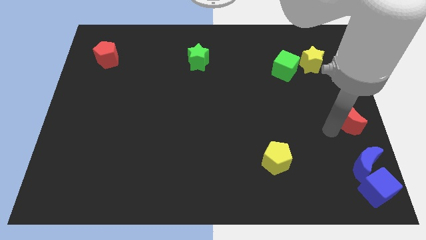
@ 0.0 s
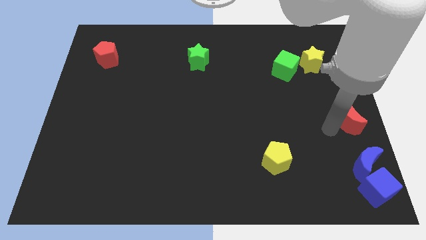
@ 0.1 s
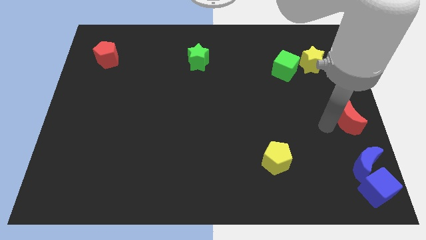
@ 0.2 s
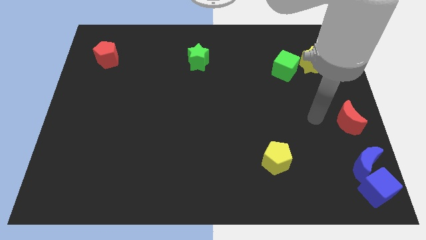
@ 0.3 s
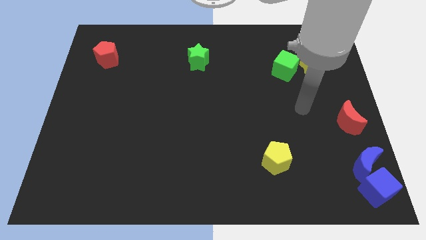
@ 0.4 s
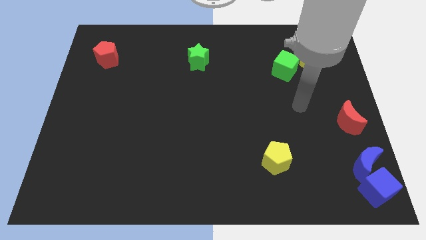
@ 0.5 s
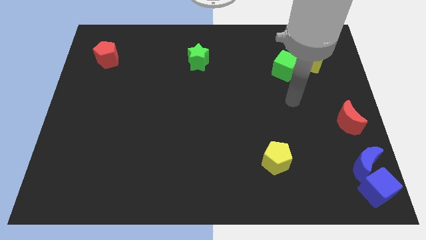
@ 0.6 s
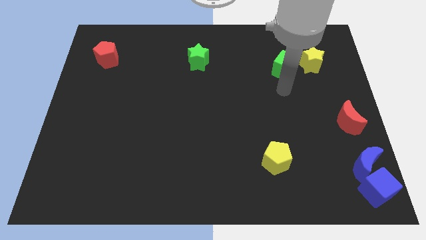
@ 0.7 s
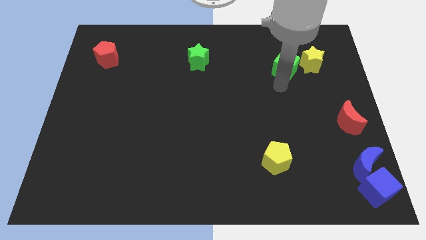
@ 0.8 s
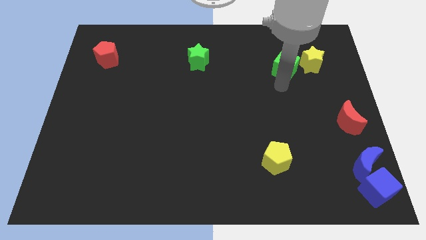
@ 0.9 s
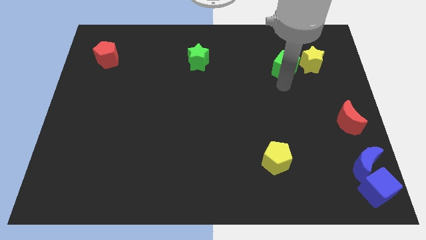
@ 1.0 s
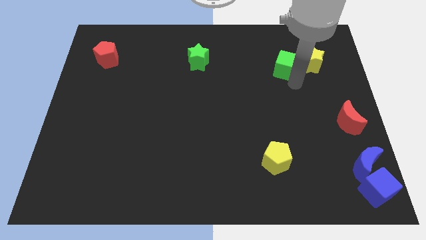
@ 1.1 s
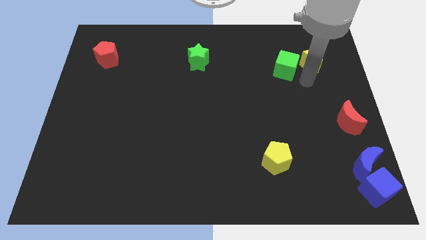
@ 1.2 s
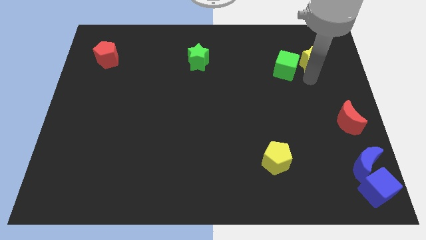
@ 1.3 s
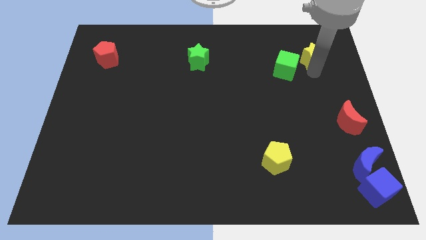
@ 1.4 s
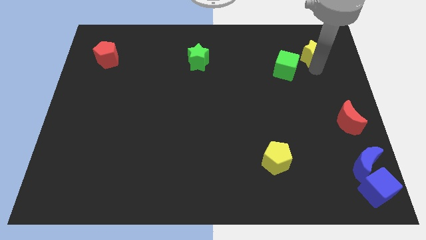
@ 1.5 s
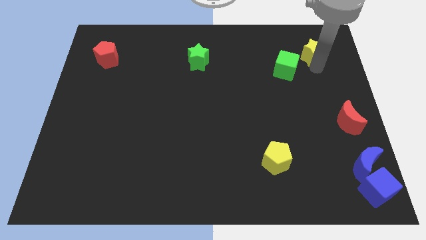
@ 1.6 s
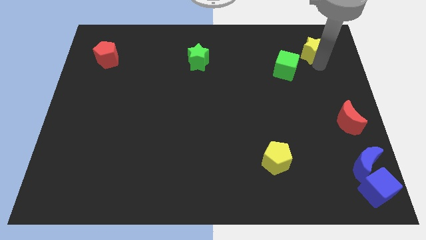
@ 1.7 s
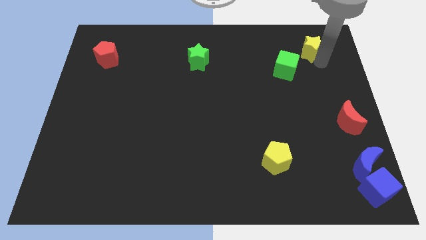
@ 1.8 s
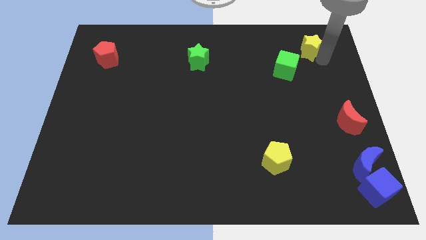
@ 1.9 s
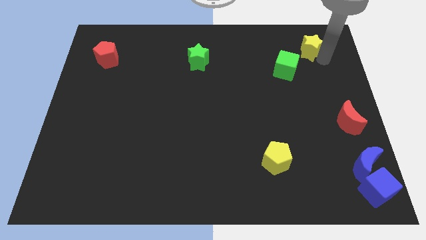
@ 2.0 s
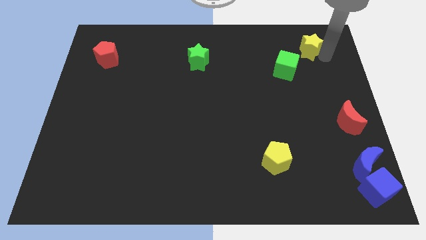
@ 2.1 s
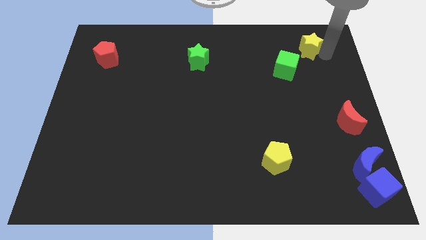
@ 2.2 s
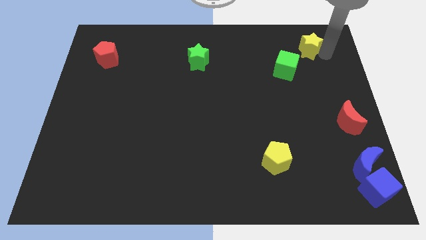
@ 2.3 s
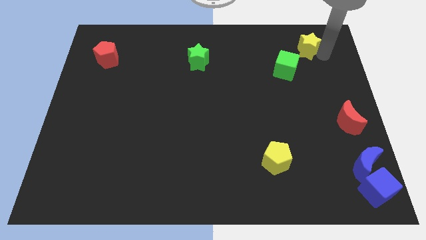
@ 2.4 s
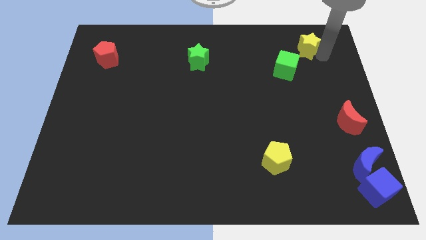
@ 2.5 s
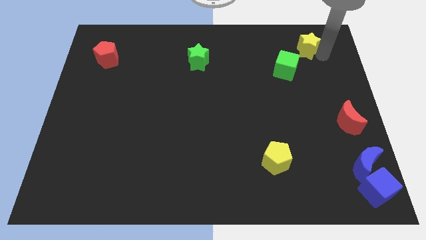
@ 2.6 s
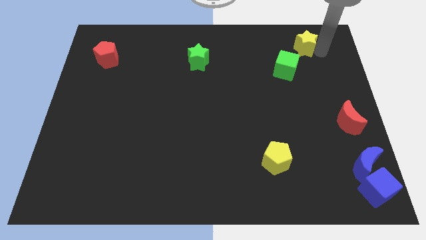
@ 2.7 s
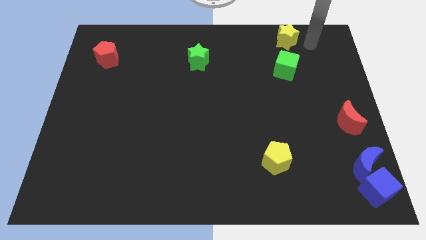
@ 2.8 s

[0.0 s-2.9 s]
push yellow star above green cube

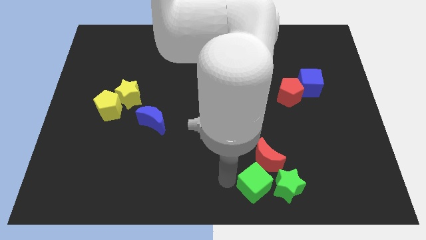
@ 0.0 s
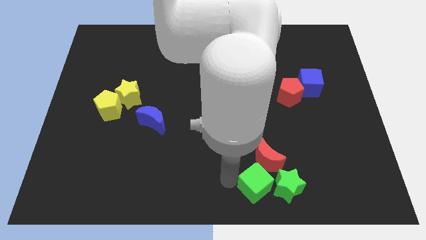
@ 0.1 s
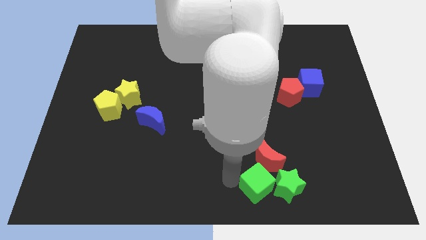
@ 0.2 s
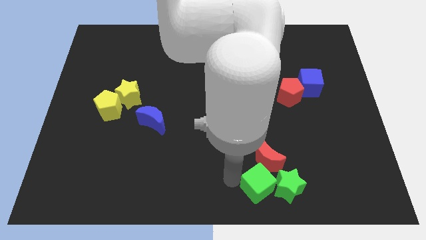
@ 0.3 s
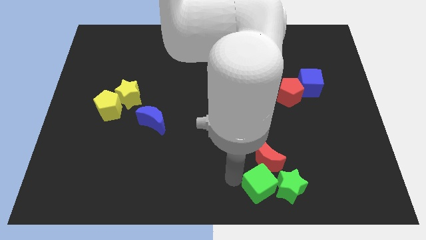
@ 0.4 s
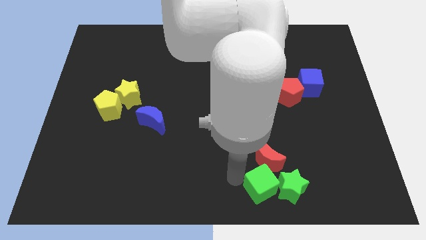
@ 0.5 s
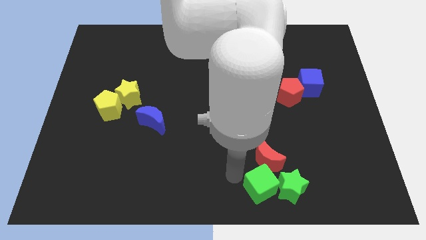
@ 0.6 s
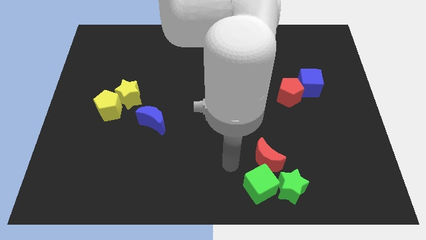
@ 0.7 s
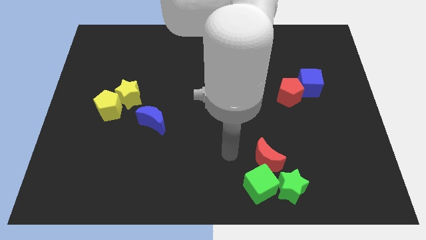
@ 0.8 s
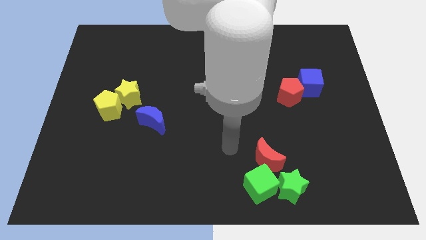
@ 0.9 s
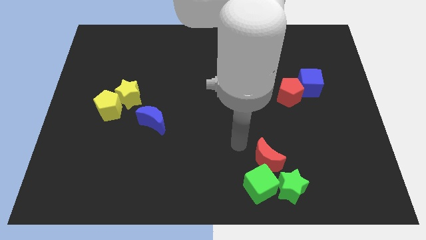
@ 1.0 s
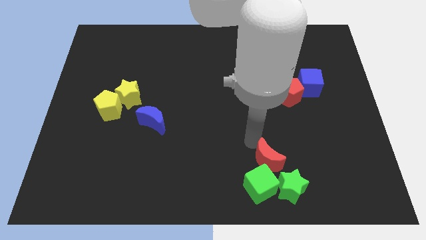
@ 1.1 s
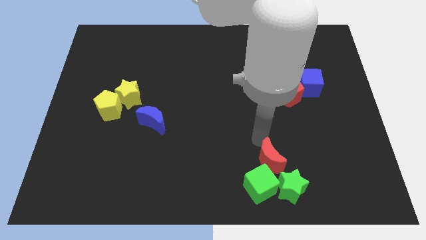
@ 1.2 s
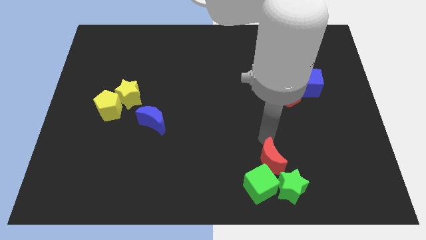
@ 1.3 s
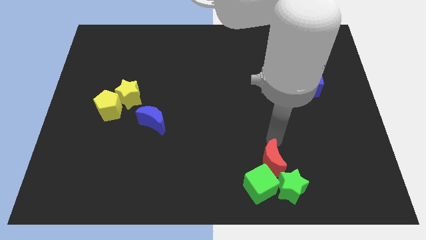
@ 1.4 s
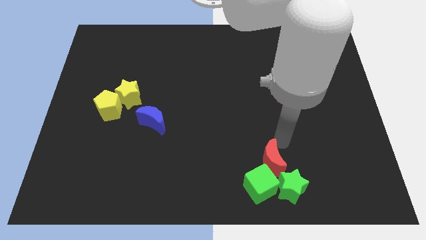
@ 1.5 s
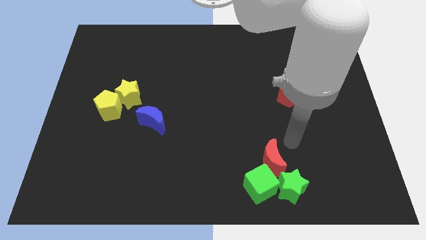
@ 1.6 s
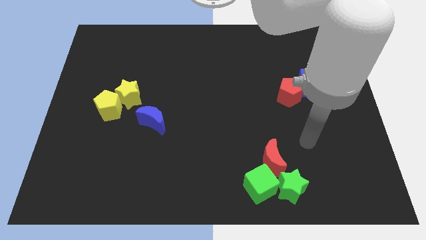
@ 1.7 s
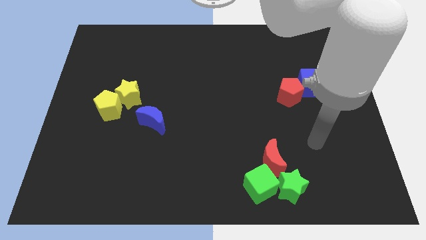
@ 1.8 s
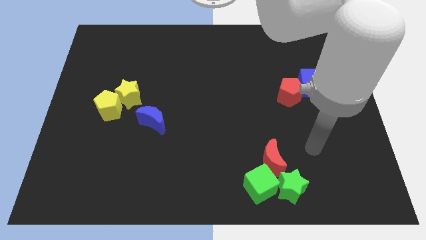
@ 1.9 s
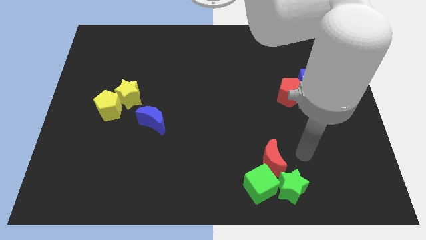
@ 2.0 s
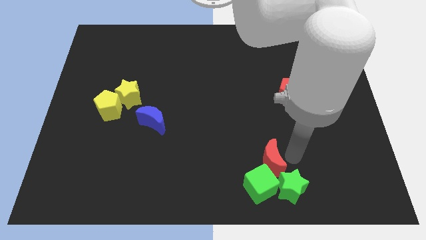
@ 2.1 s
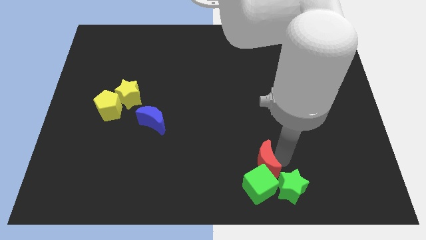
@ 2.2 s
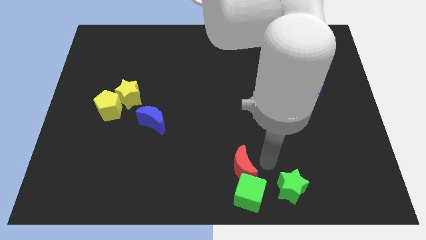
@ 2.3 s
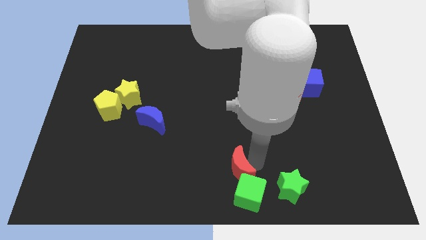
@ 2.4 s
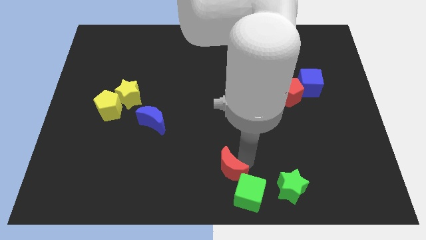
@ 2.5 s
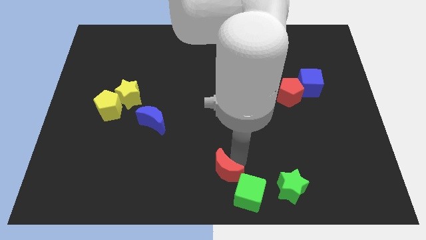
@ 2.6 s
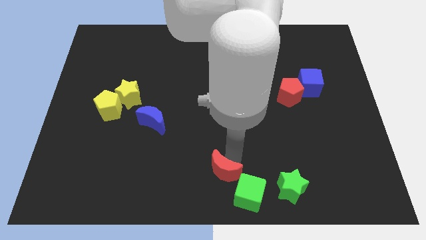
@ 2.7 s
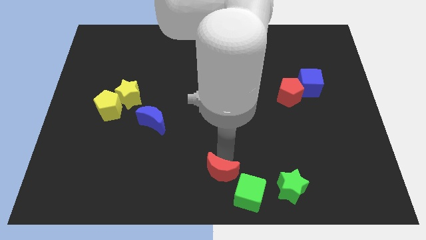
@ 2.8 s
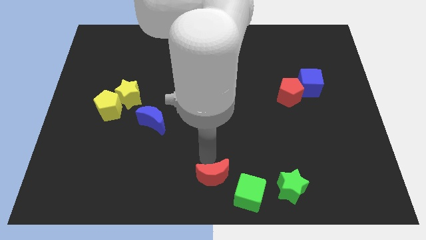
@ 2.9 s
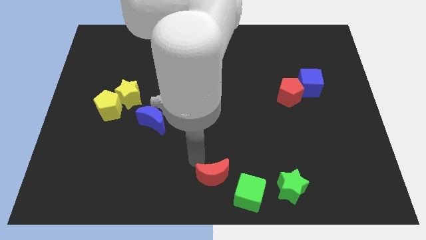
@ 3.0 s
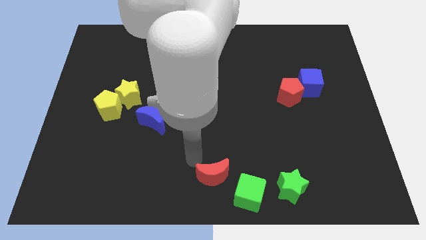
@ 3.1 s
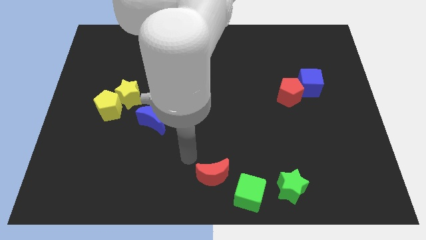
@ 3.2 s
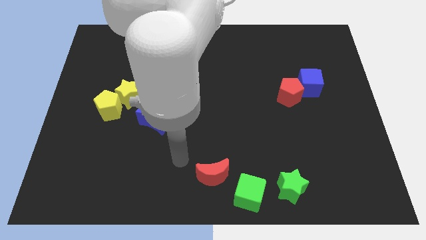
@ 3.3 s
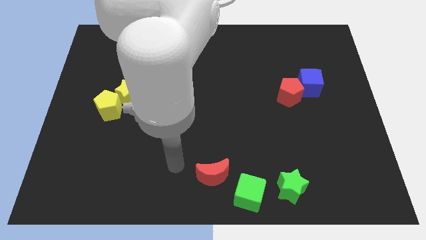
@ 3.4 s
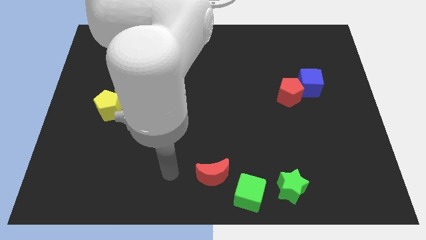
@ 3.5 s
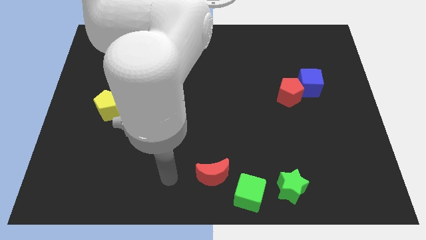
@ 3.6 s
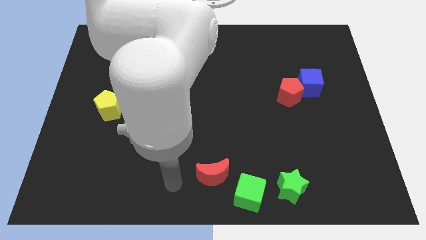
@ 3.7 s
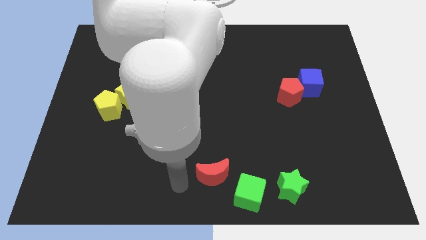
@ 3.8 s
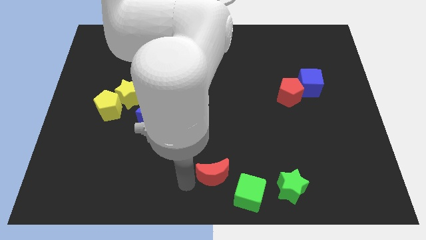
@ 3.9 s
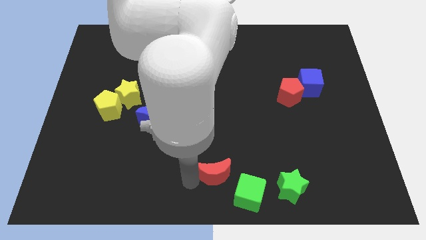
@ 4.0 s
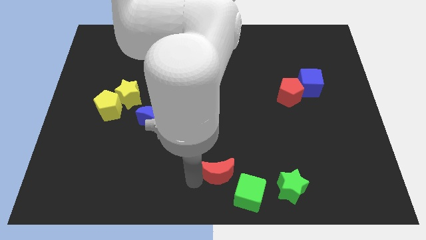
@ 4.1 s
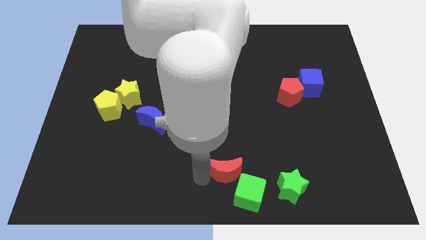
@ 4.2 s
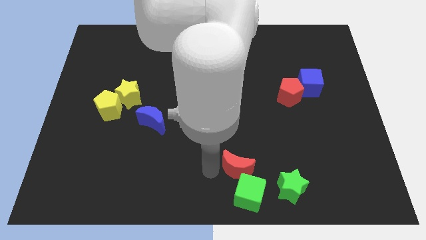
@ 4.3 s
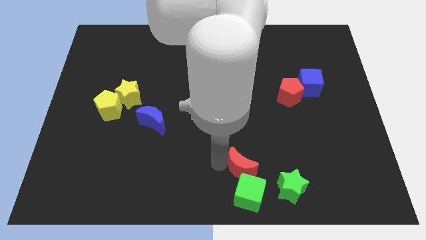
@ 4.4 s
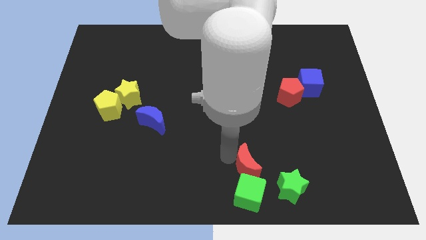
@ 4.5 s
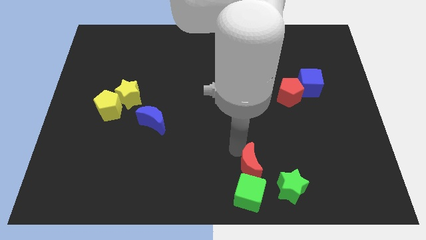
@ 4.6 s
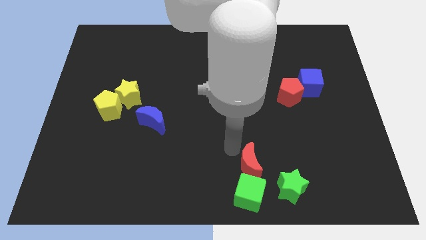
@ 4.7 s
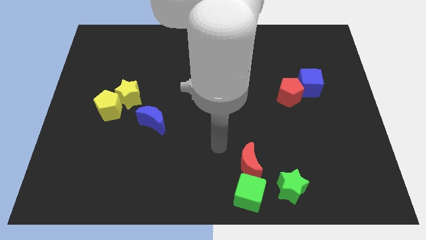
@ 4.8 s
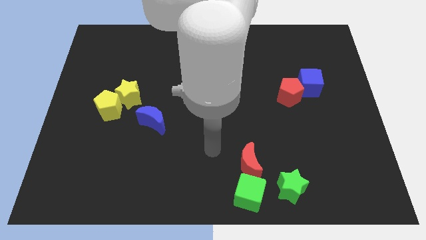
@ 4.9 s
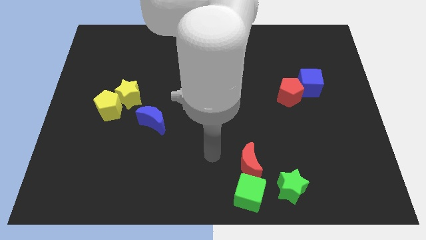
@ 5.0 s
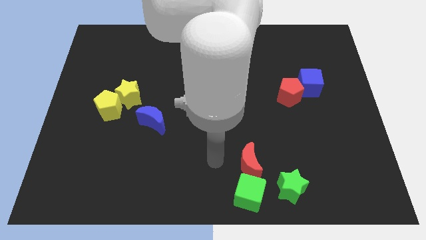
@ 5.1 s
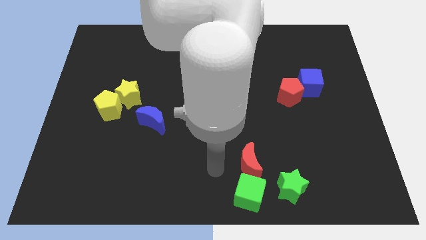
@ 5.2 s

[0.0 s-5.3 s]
place the red moon on the top of the green cube

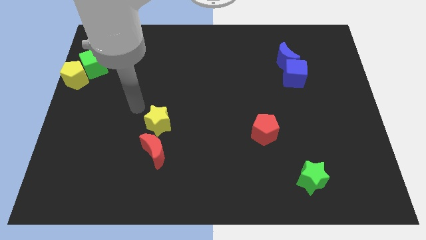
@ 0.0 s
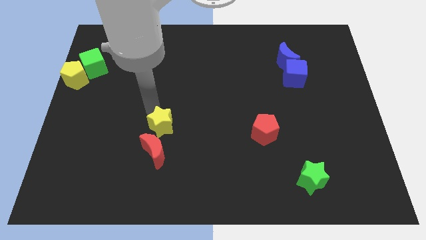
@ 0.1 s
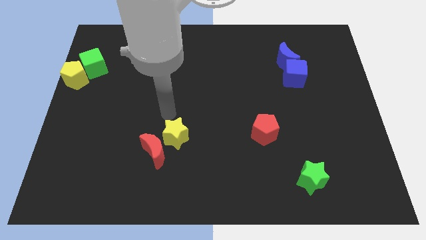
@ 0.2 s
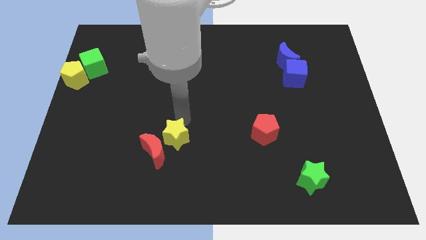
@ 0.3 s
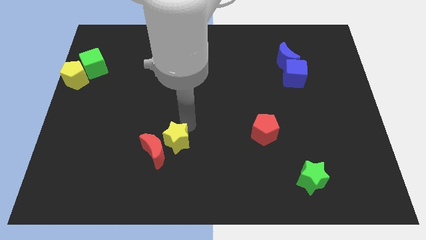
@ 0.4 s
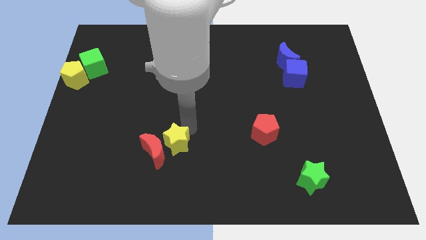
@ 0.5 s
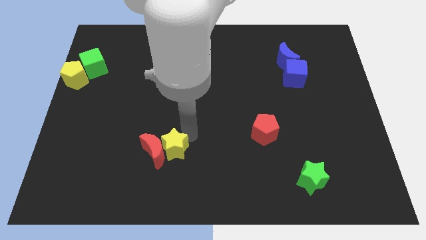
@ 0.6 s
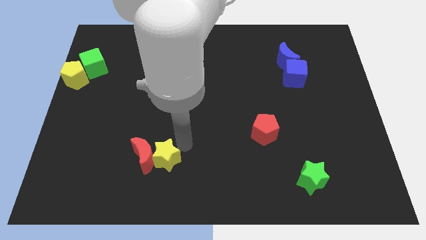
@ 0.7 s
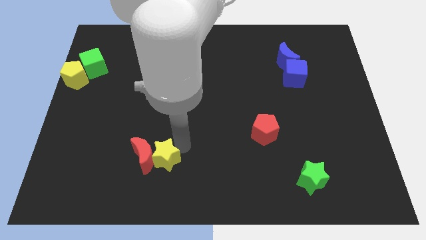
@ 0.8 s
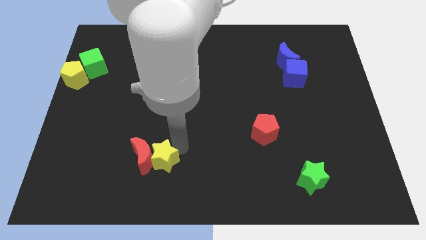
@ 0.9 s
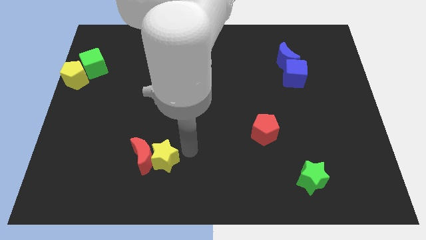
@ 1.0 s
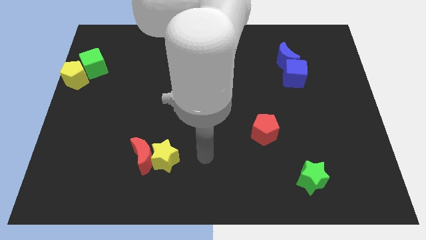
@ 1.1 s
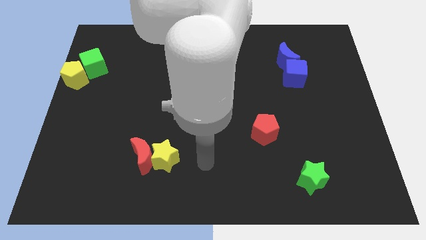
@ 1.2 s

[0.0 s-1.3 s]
push the yellow star to the right of the red moon
